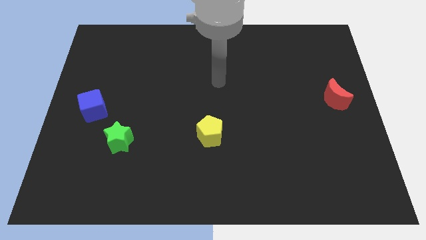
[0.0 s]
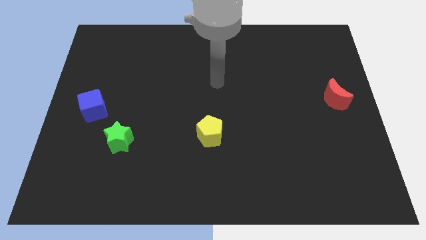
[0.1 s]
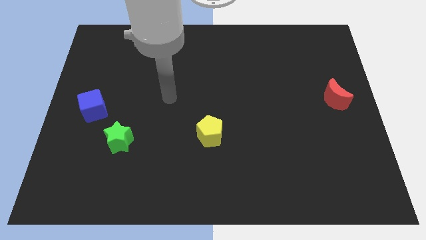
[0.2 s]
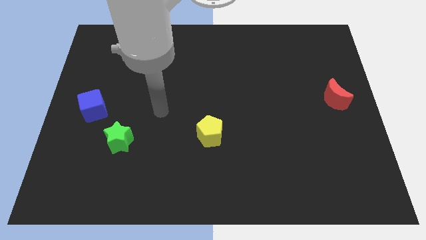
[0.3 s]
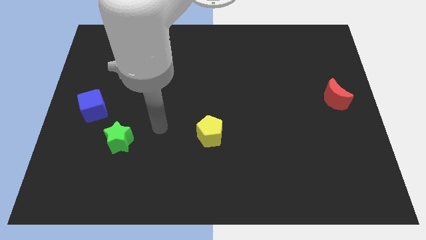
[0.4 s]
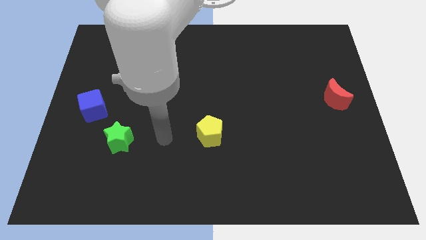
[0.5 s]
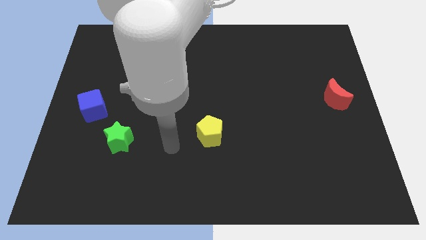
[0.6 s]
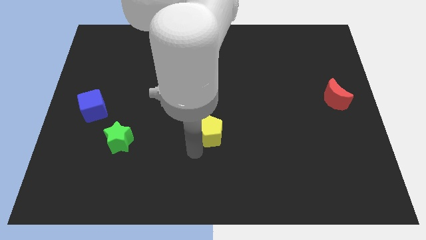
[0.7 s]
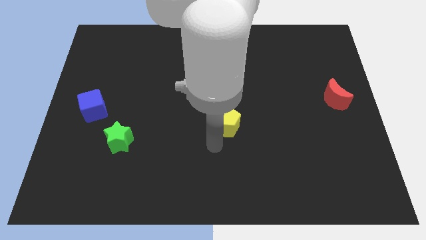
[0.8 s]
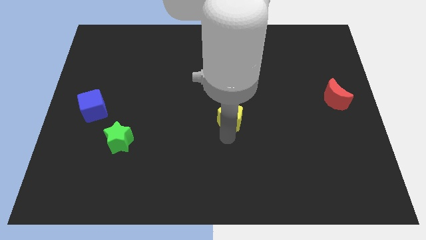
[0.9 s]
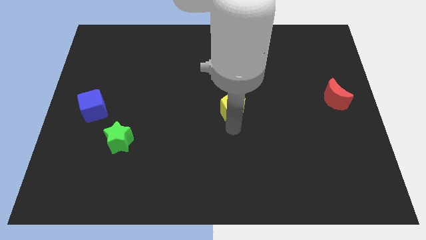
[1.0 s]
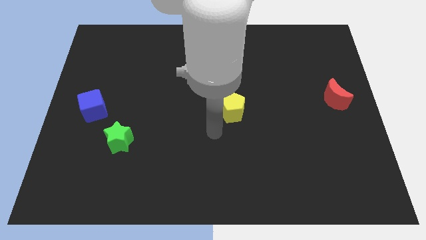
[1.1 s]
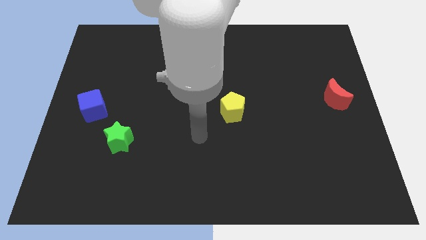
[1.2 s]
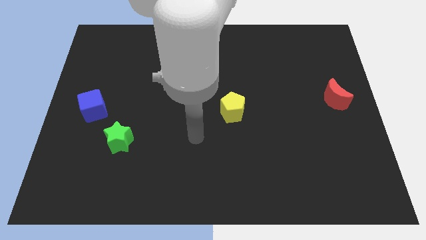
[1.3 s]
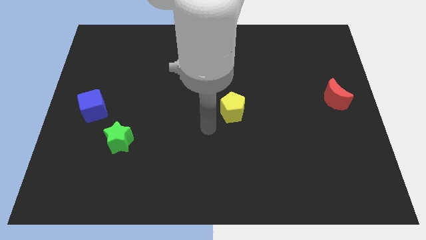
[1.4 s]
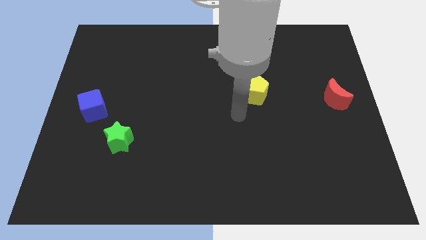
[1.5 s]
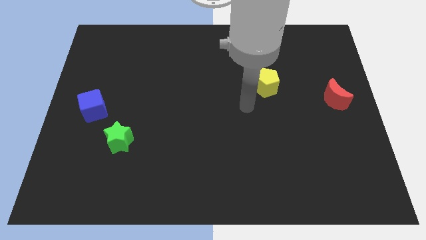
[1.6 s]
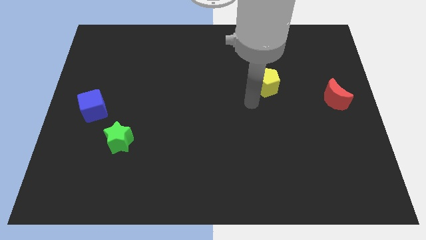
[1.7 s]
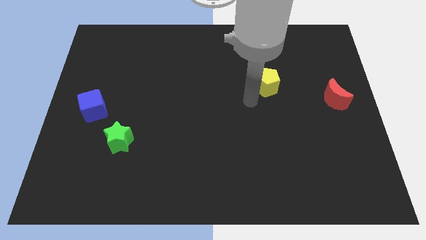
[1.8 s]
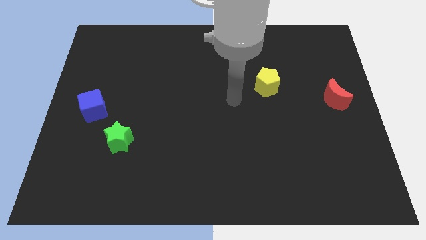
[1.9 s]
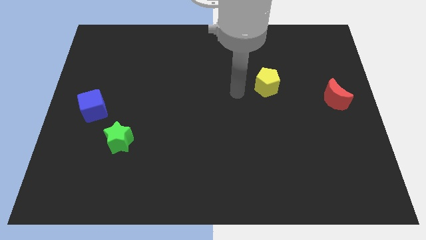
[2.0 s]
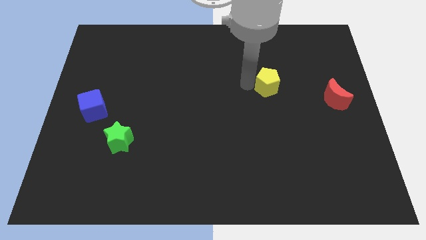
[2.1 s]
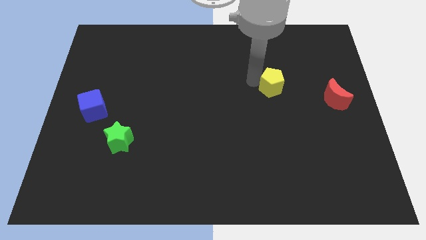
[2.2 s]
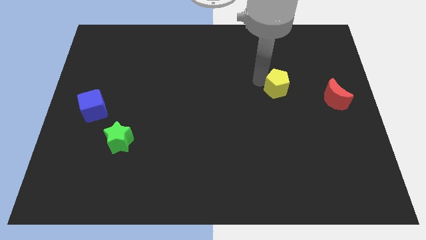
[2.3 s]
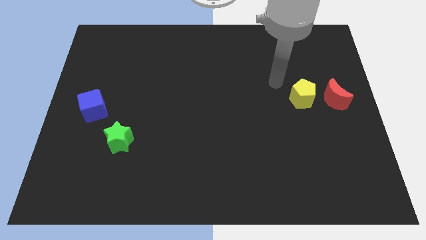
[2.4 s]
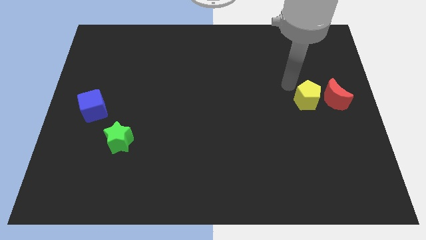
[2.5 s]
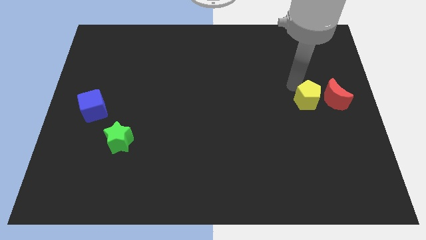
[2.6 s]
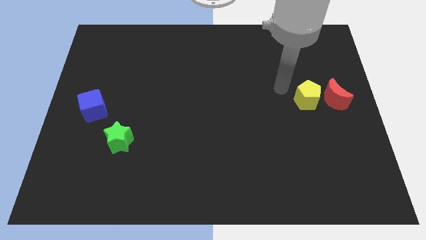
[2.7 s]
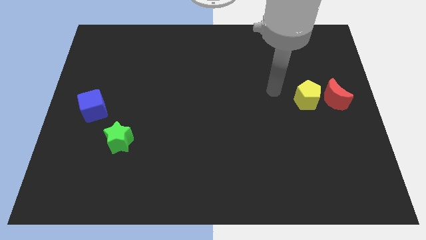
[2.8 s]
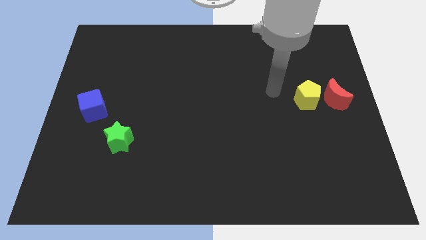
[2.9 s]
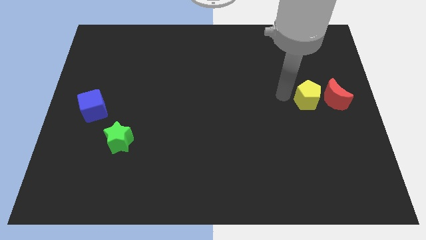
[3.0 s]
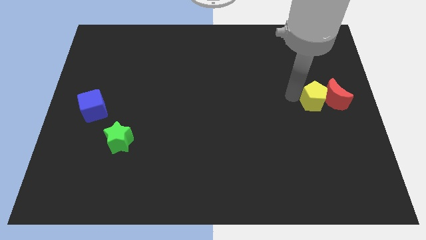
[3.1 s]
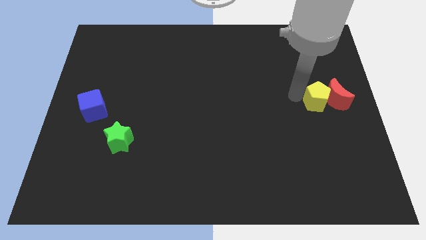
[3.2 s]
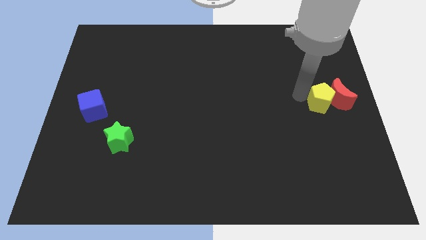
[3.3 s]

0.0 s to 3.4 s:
push the yellow block next to the moon

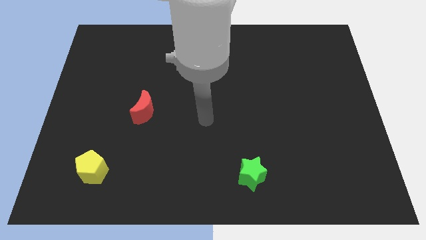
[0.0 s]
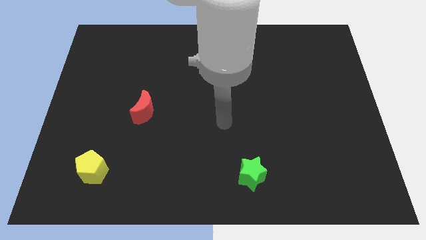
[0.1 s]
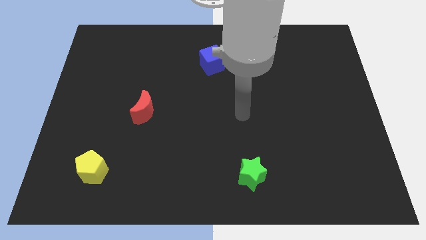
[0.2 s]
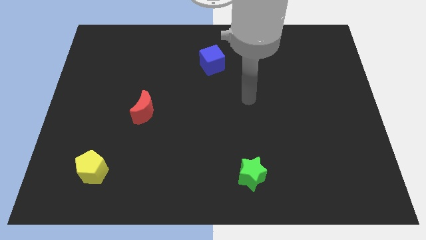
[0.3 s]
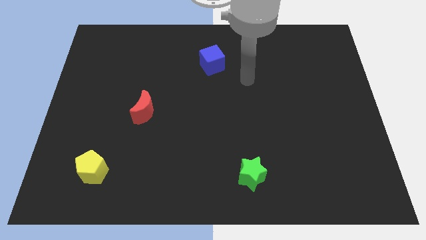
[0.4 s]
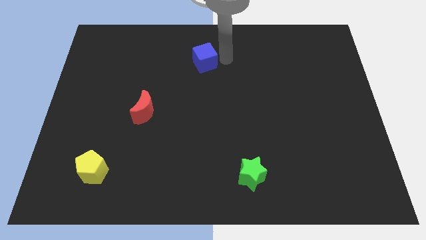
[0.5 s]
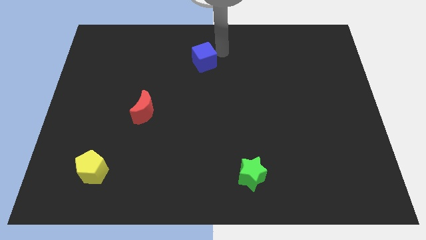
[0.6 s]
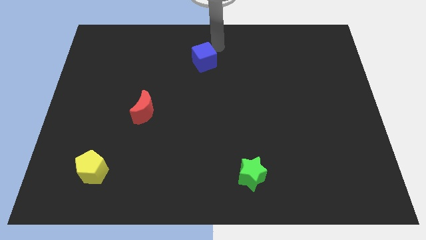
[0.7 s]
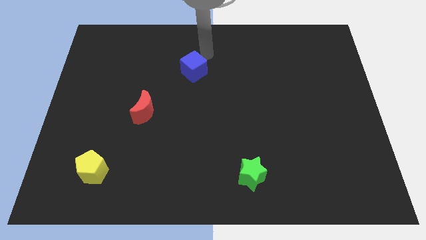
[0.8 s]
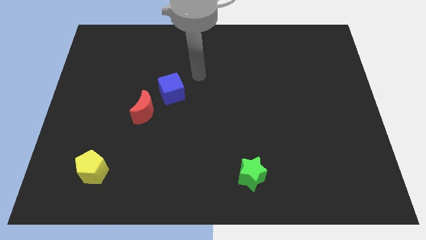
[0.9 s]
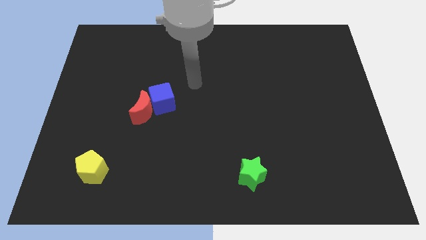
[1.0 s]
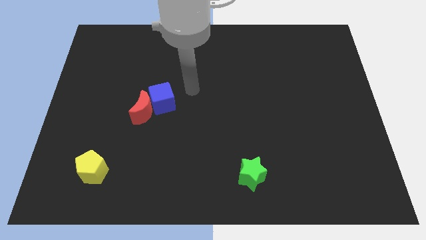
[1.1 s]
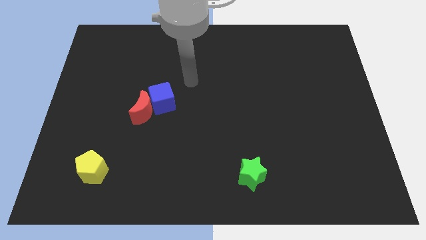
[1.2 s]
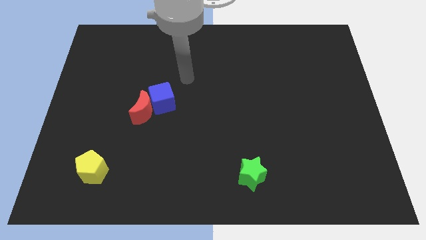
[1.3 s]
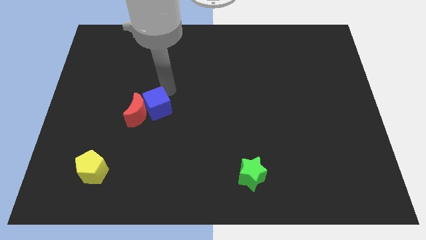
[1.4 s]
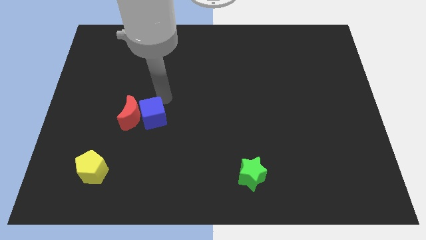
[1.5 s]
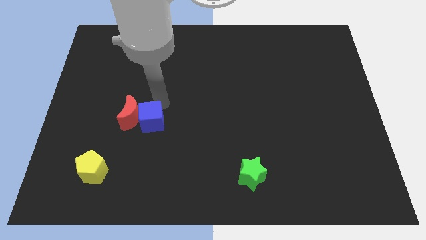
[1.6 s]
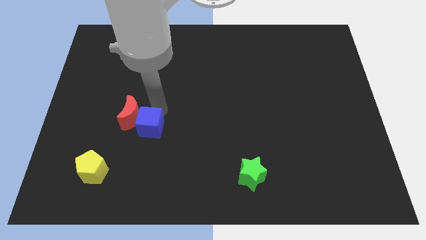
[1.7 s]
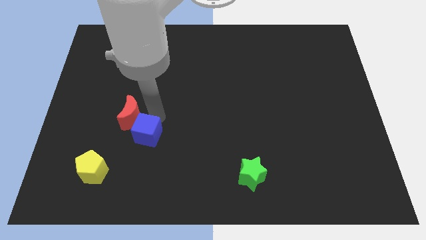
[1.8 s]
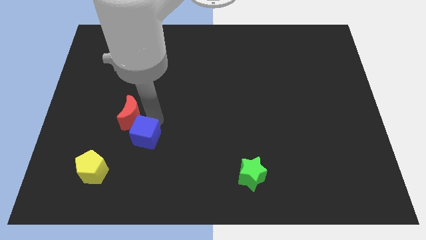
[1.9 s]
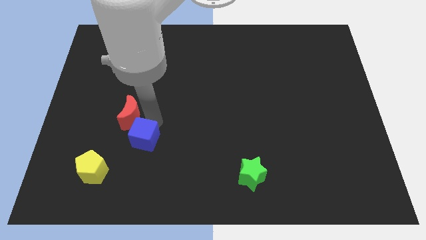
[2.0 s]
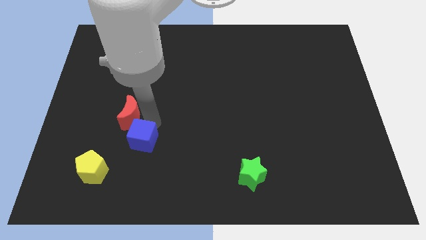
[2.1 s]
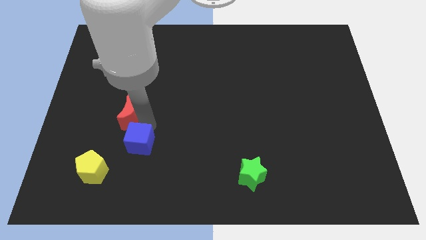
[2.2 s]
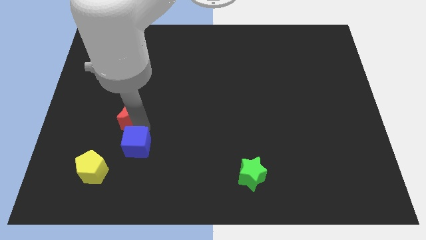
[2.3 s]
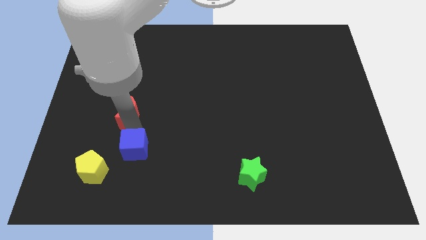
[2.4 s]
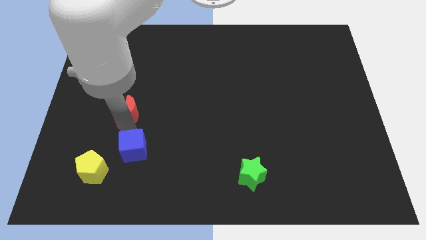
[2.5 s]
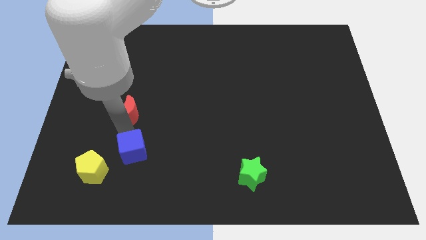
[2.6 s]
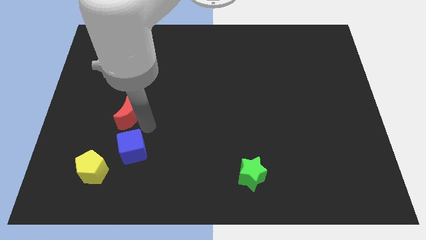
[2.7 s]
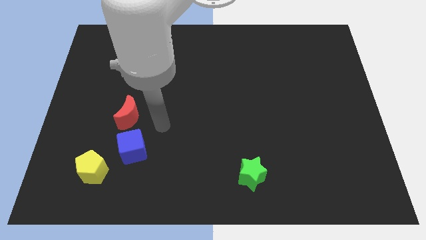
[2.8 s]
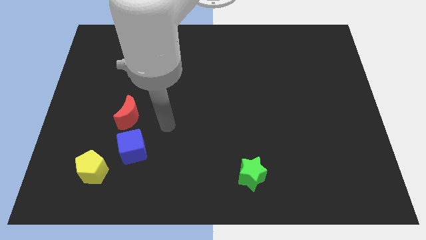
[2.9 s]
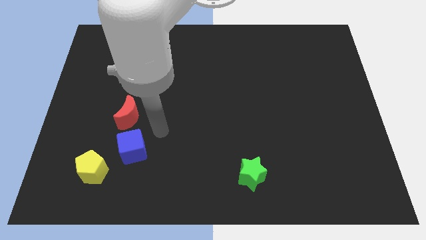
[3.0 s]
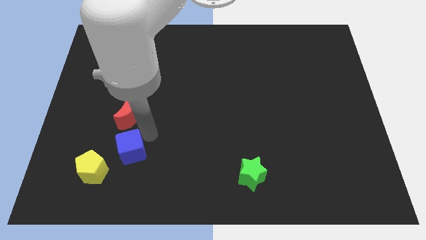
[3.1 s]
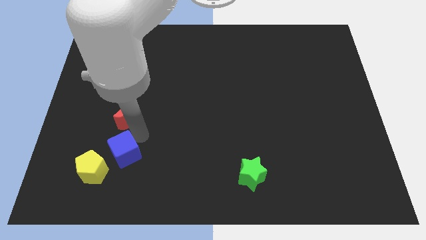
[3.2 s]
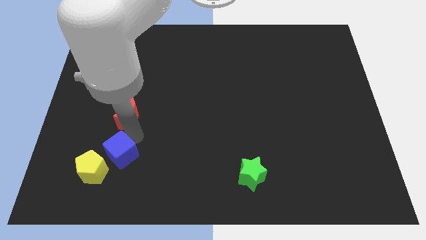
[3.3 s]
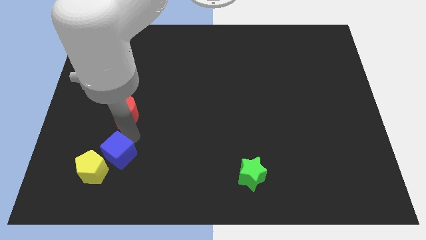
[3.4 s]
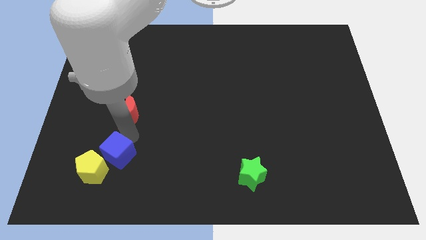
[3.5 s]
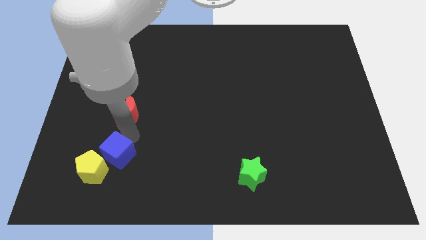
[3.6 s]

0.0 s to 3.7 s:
push the cube close to the yellow pentagon

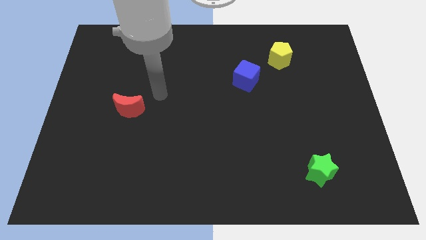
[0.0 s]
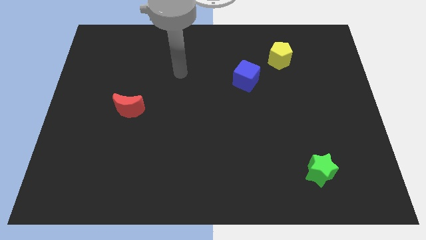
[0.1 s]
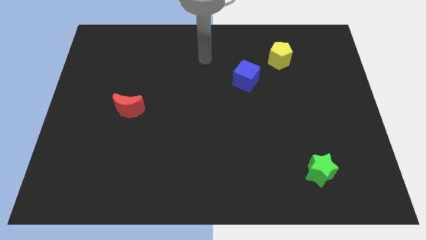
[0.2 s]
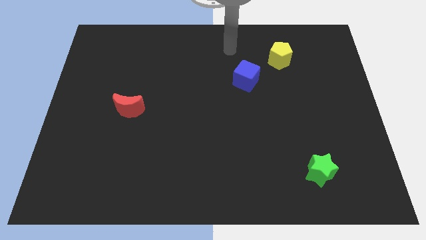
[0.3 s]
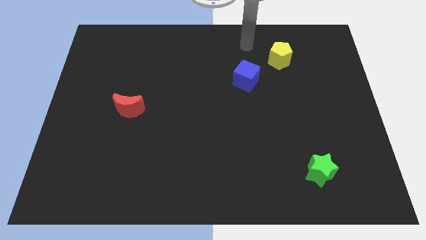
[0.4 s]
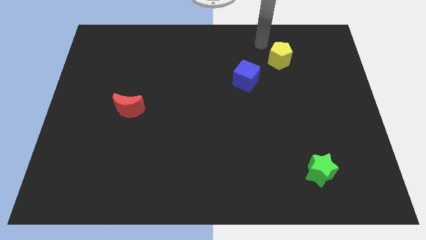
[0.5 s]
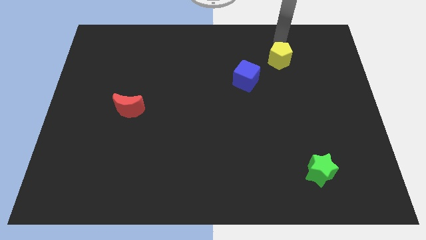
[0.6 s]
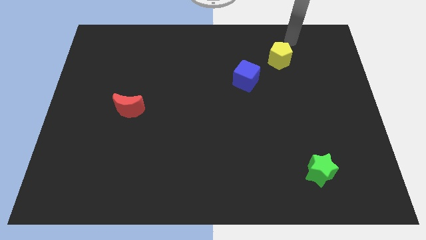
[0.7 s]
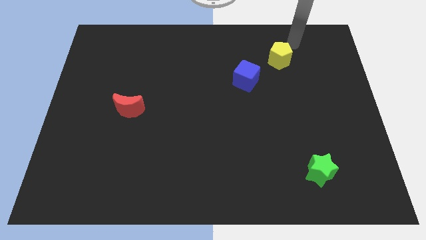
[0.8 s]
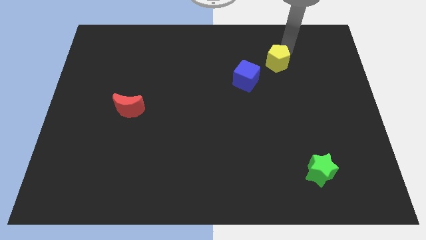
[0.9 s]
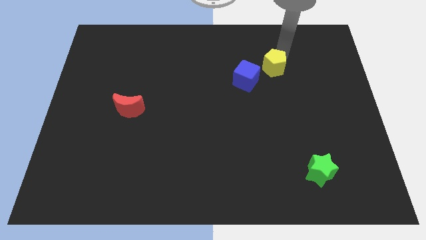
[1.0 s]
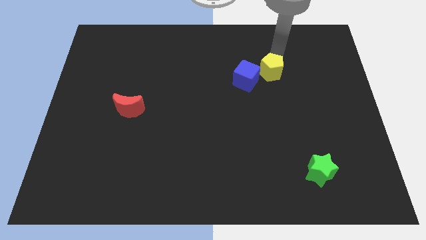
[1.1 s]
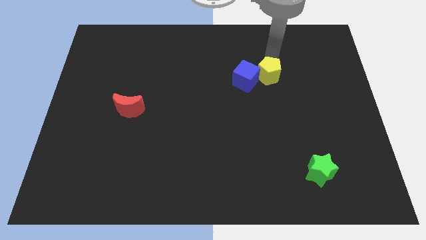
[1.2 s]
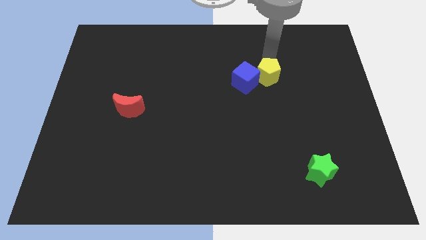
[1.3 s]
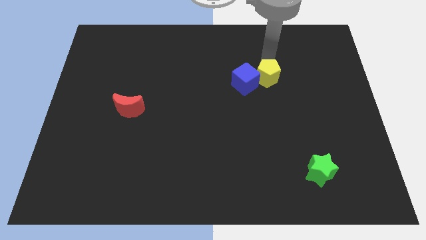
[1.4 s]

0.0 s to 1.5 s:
put the yellow block close to the blue block
